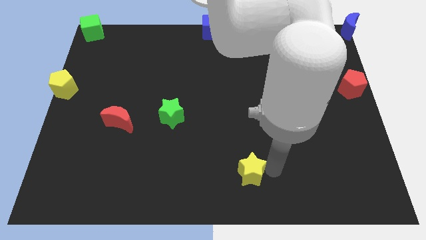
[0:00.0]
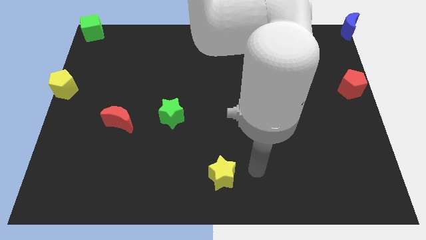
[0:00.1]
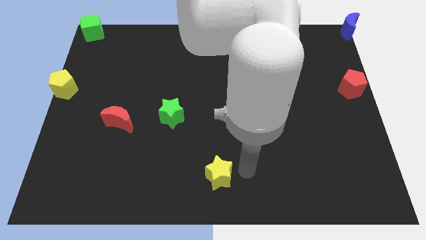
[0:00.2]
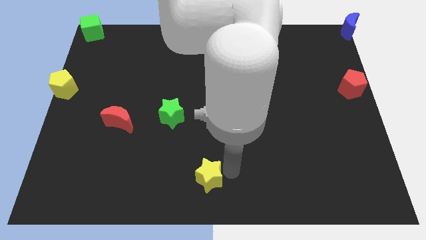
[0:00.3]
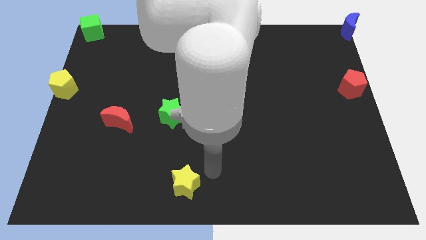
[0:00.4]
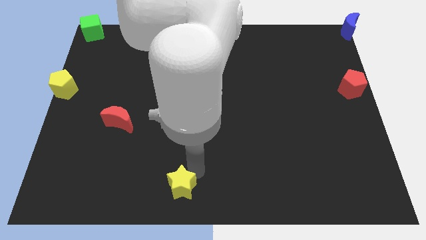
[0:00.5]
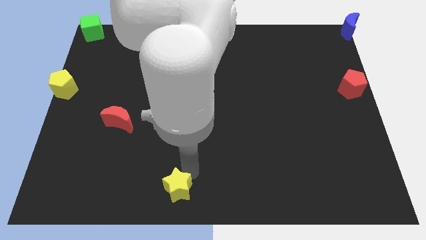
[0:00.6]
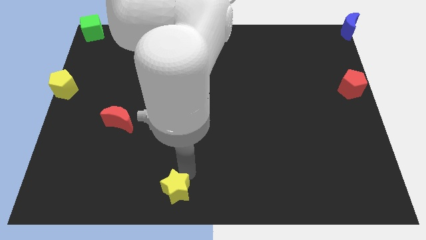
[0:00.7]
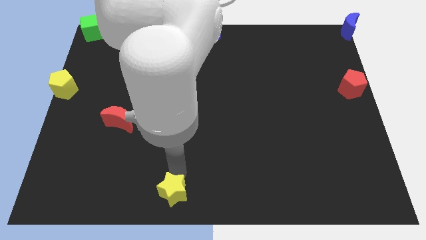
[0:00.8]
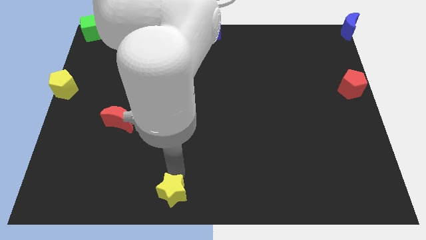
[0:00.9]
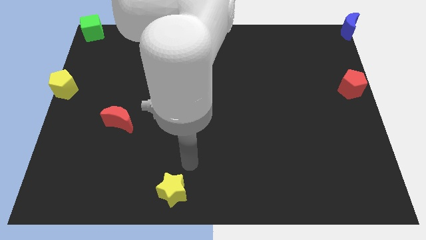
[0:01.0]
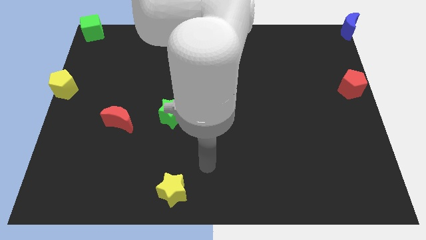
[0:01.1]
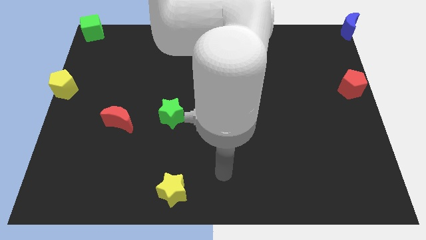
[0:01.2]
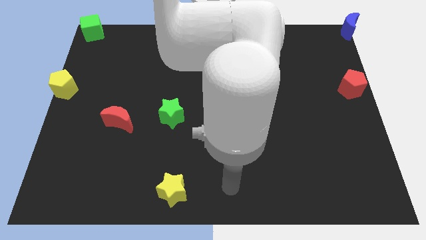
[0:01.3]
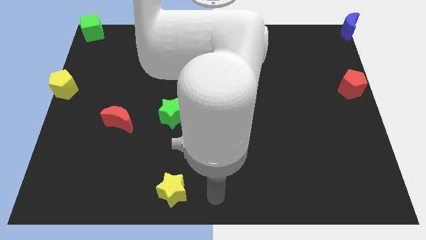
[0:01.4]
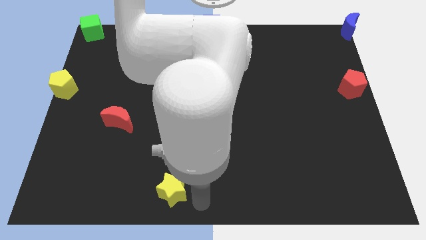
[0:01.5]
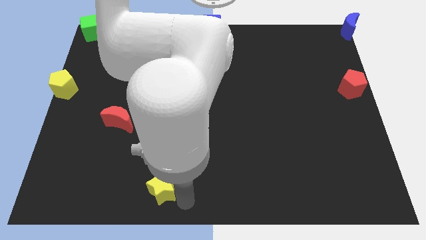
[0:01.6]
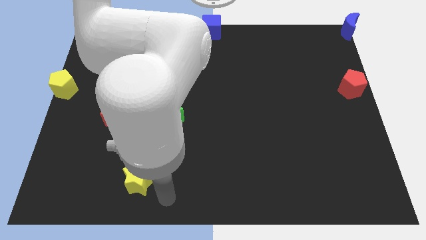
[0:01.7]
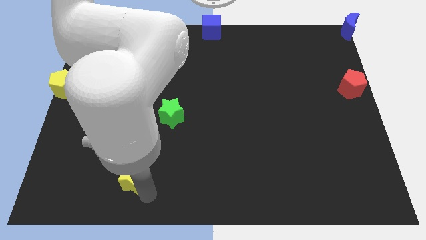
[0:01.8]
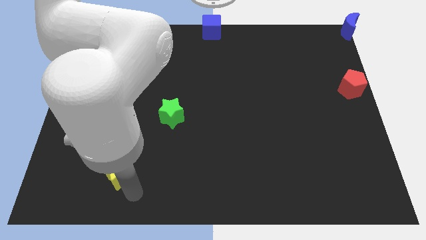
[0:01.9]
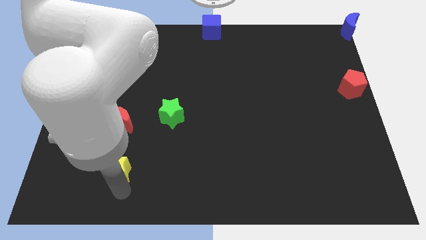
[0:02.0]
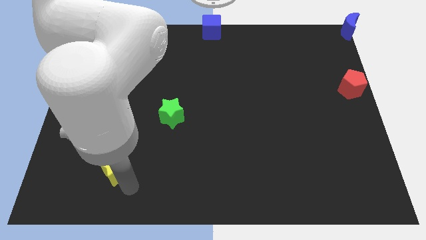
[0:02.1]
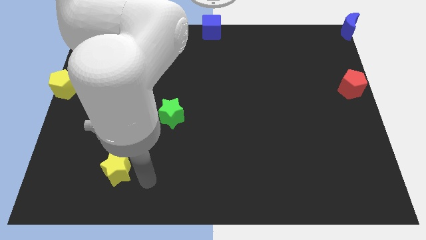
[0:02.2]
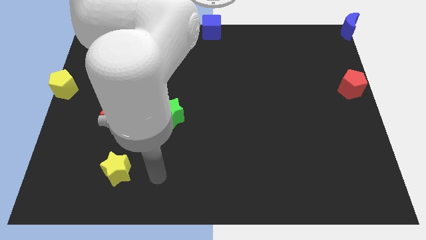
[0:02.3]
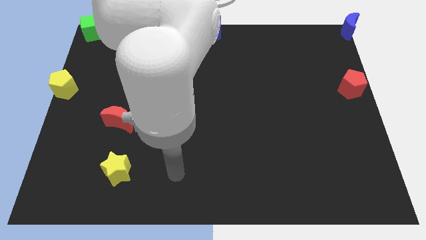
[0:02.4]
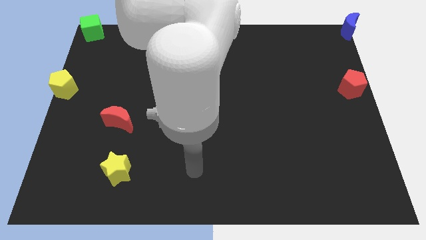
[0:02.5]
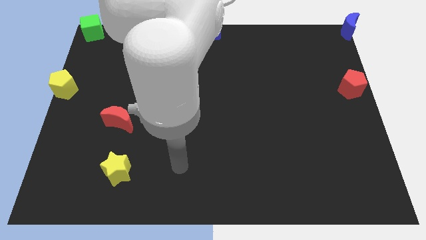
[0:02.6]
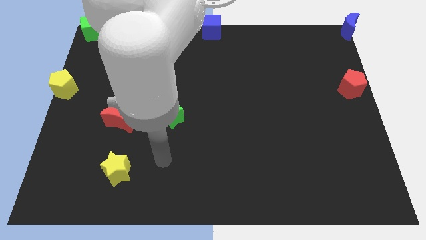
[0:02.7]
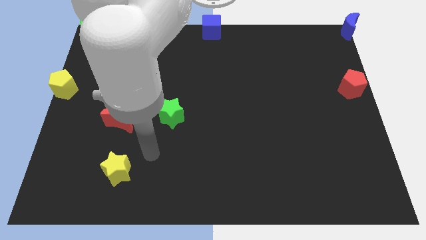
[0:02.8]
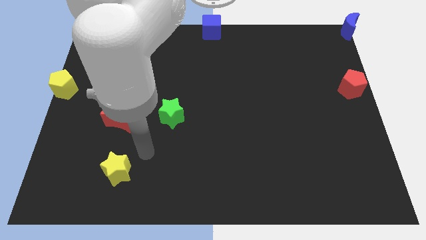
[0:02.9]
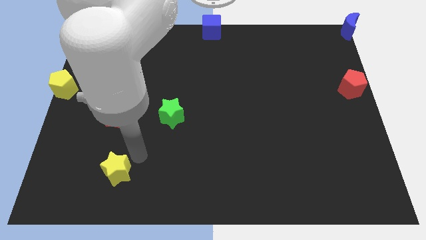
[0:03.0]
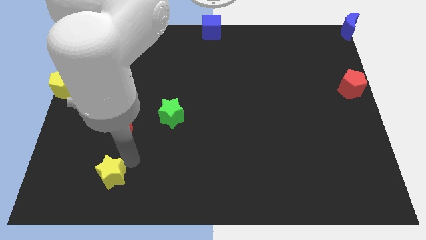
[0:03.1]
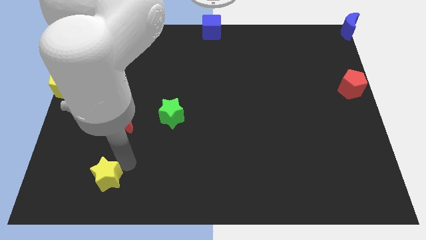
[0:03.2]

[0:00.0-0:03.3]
place the yellow star vertically towards the red crescent

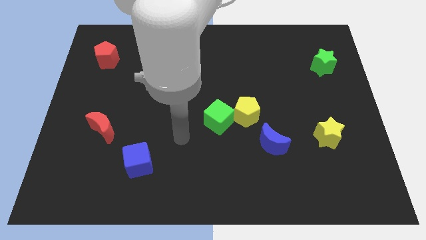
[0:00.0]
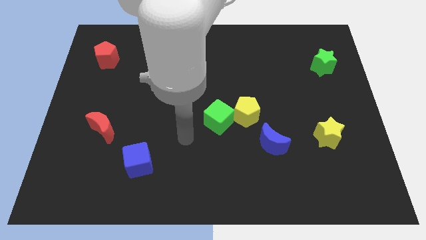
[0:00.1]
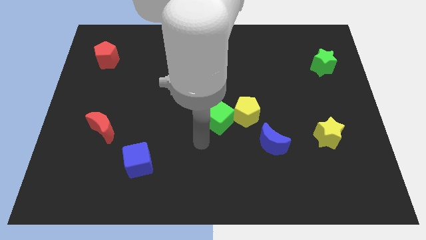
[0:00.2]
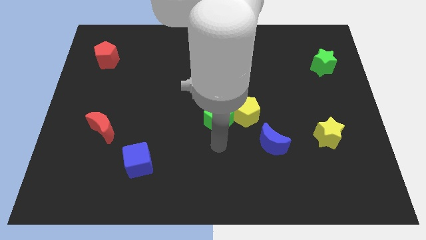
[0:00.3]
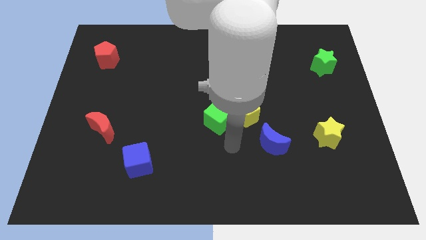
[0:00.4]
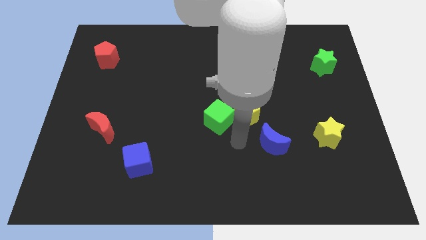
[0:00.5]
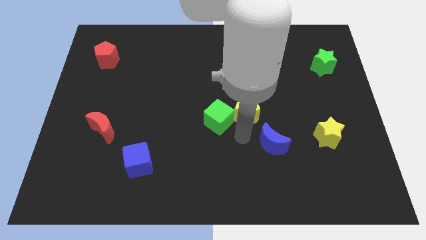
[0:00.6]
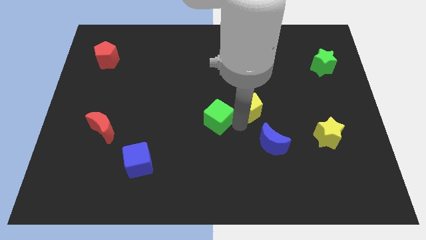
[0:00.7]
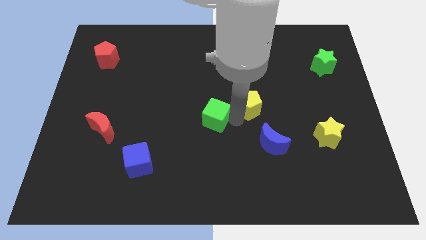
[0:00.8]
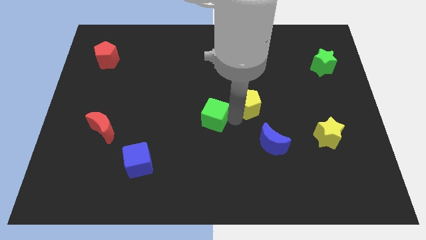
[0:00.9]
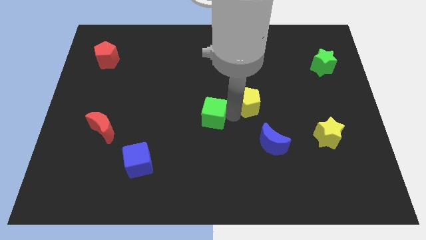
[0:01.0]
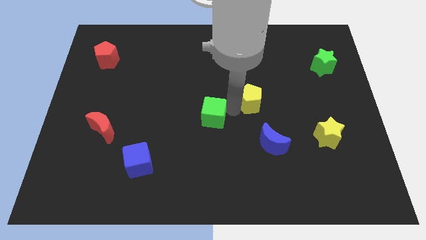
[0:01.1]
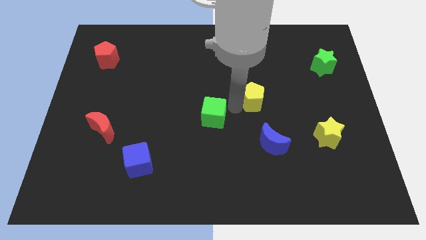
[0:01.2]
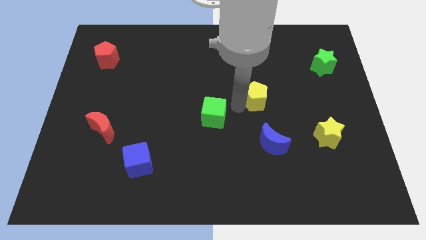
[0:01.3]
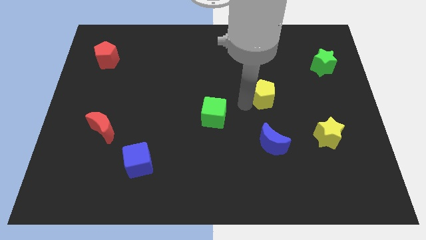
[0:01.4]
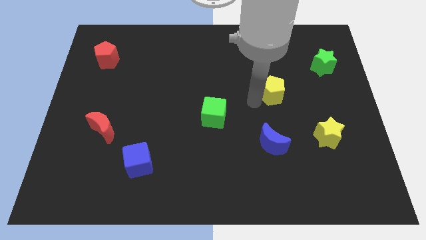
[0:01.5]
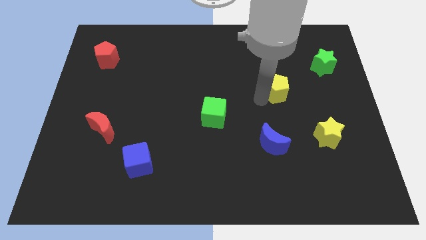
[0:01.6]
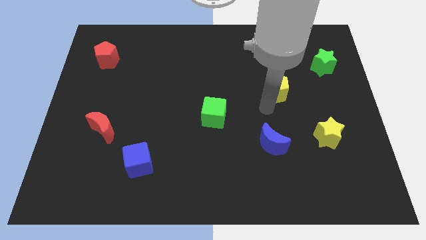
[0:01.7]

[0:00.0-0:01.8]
move yellow pentagon right diagonally towards green star

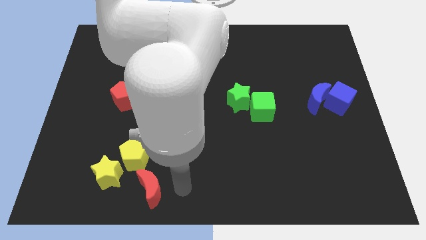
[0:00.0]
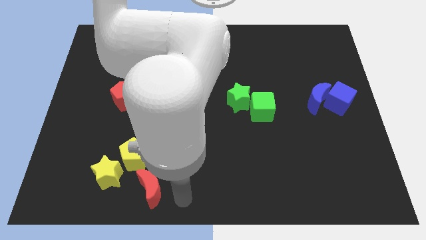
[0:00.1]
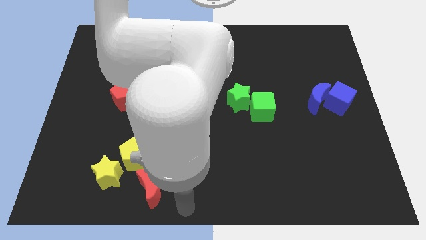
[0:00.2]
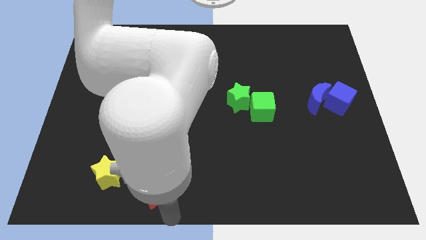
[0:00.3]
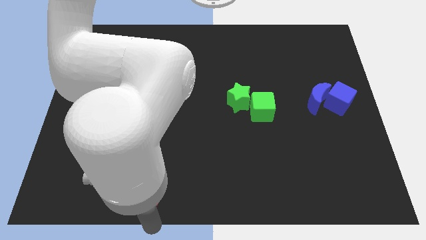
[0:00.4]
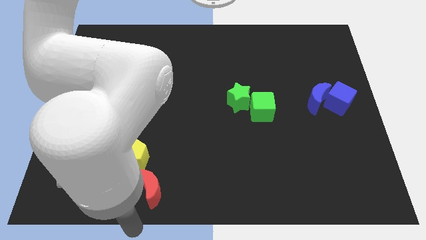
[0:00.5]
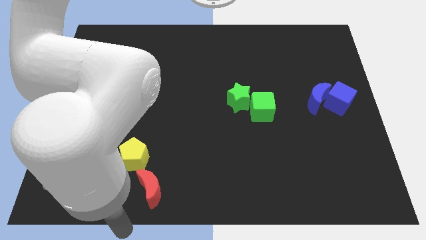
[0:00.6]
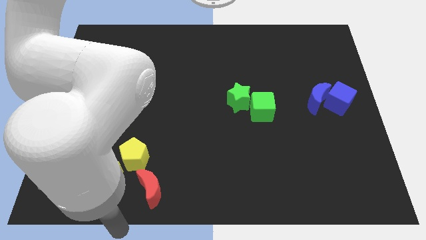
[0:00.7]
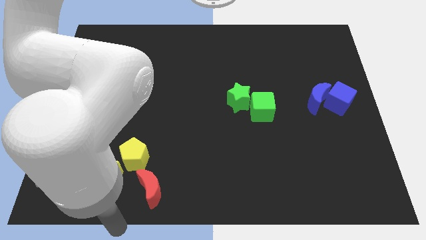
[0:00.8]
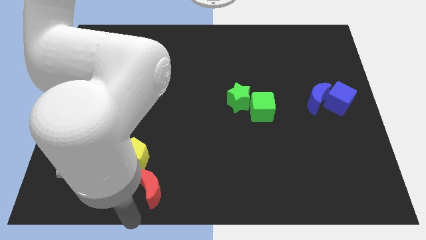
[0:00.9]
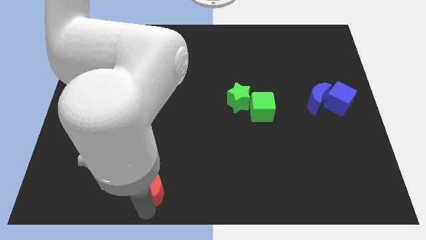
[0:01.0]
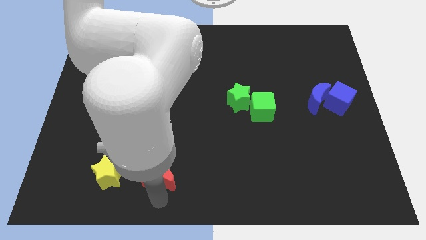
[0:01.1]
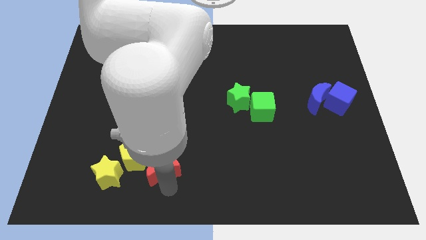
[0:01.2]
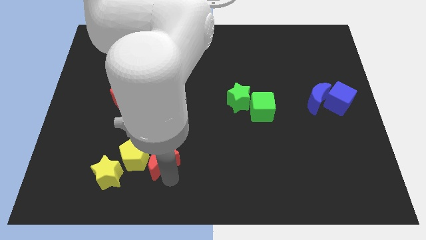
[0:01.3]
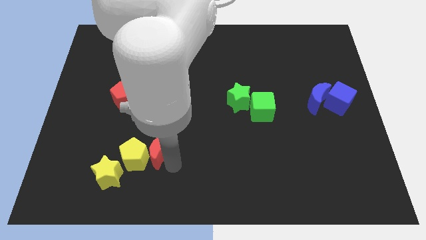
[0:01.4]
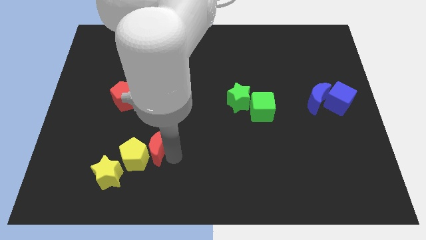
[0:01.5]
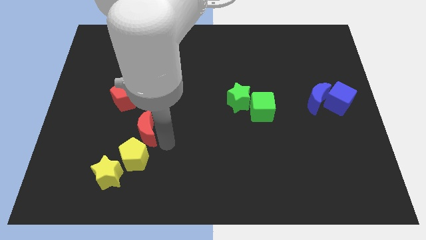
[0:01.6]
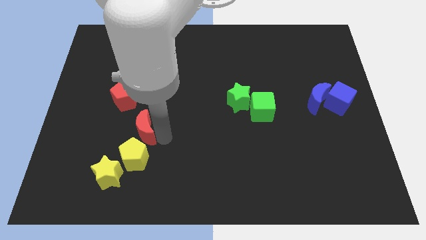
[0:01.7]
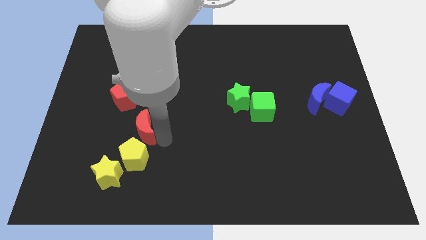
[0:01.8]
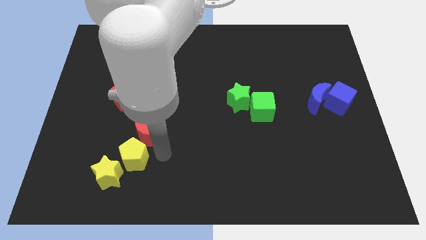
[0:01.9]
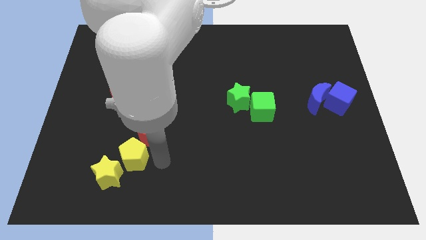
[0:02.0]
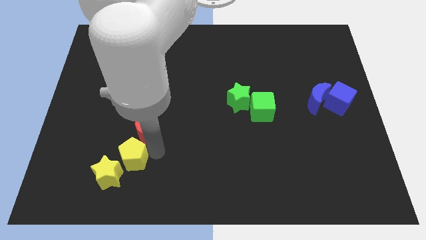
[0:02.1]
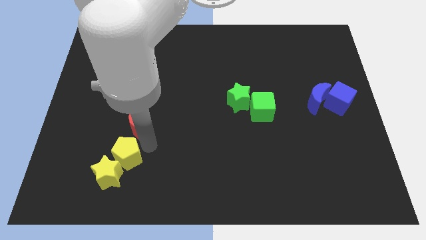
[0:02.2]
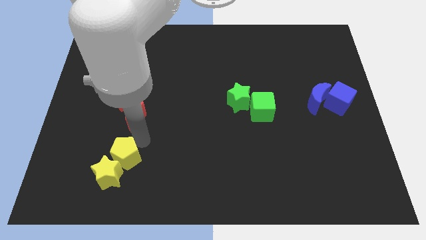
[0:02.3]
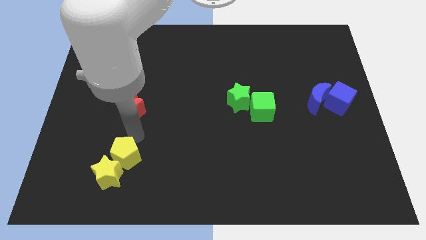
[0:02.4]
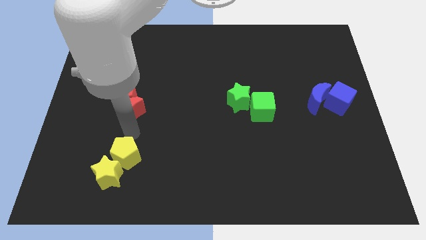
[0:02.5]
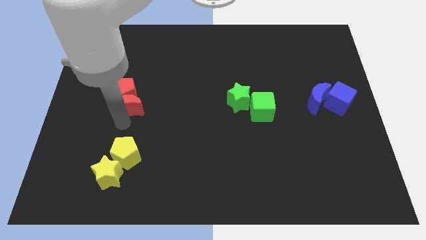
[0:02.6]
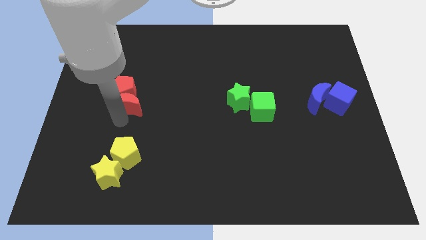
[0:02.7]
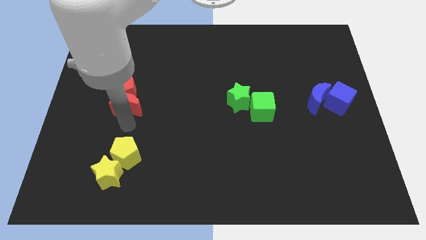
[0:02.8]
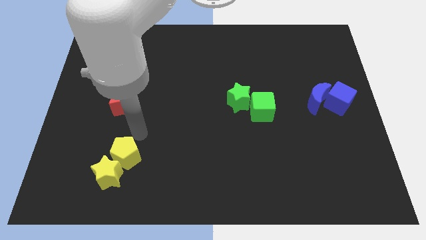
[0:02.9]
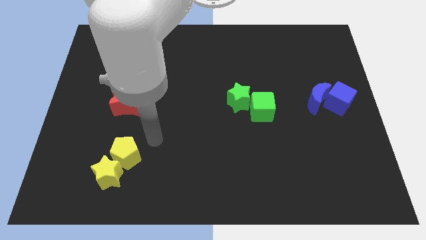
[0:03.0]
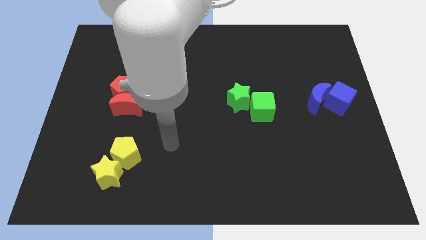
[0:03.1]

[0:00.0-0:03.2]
push the red moon into the red pentagon

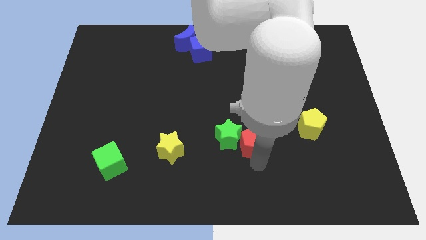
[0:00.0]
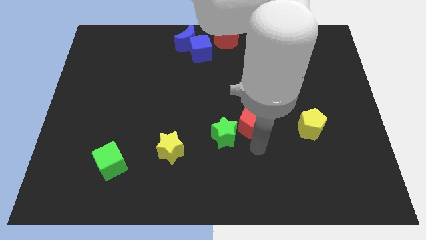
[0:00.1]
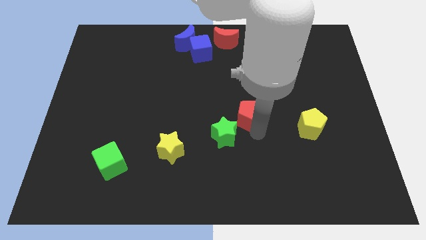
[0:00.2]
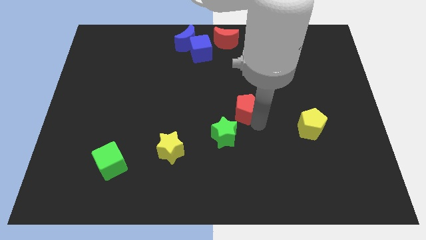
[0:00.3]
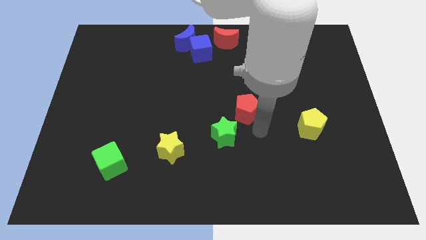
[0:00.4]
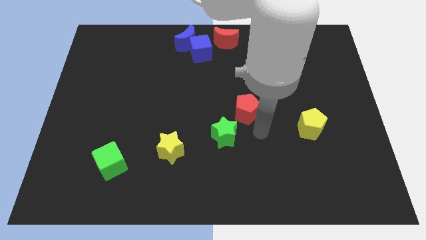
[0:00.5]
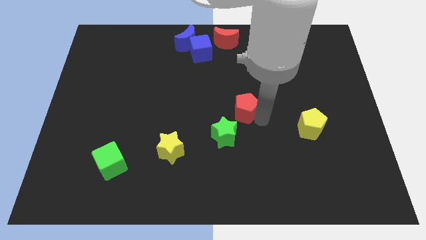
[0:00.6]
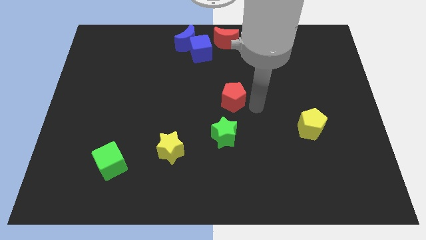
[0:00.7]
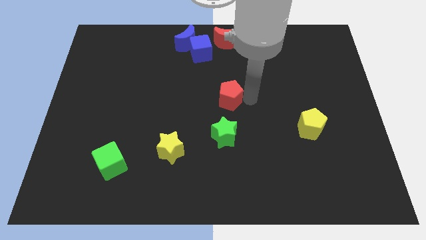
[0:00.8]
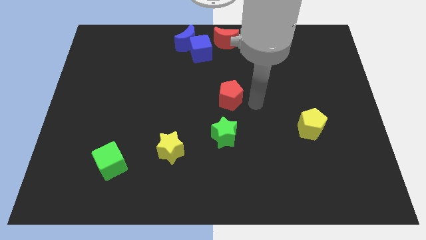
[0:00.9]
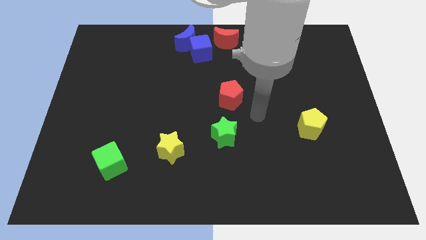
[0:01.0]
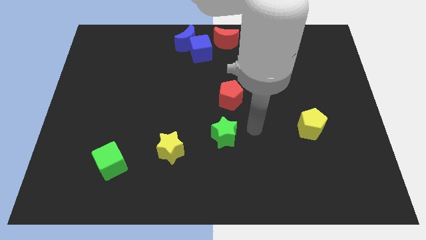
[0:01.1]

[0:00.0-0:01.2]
push the red pentagon to the top of the green star
